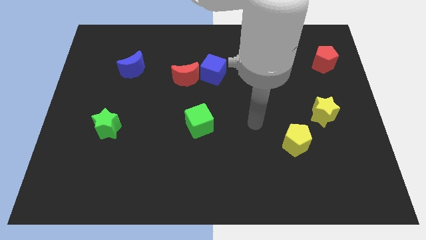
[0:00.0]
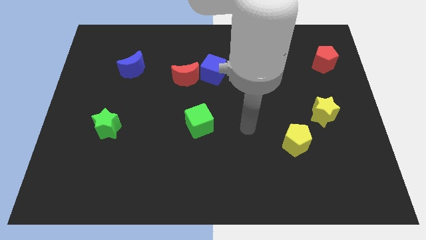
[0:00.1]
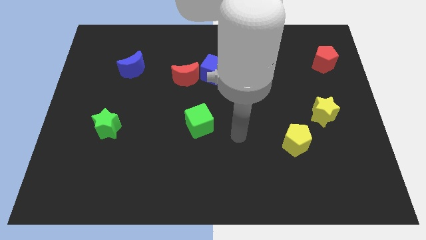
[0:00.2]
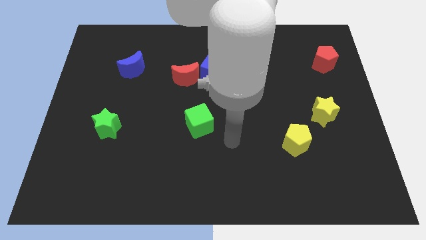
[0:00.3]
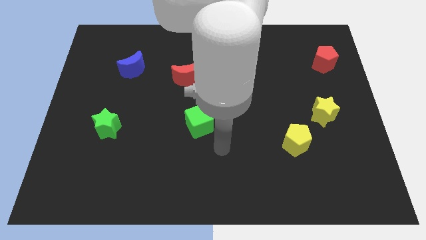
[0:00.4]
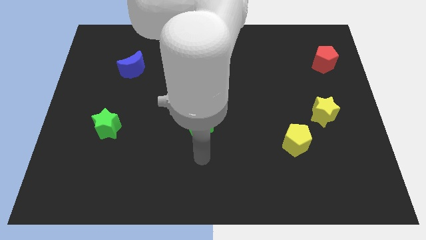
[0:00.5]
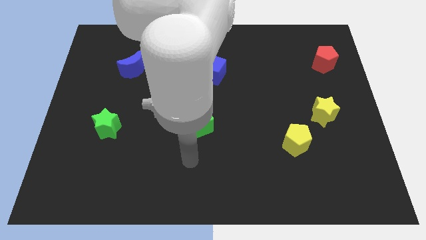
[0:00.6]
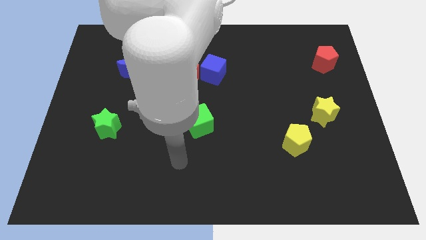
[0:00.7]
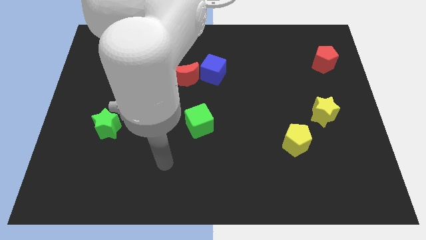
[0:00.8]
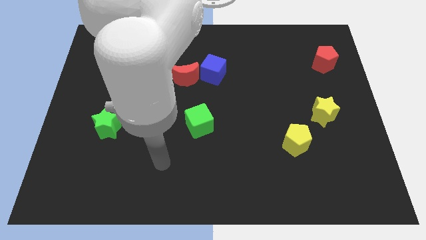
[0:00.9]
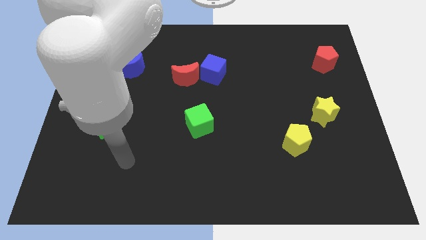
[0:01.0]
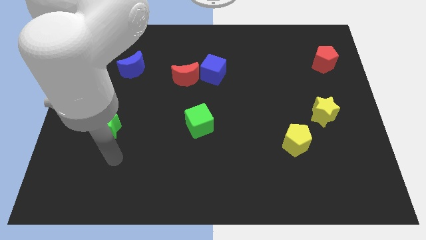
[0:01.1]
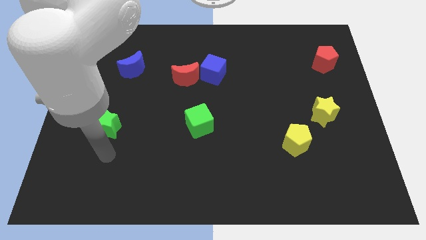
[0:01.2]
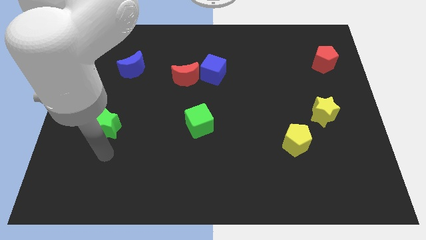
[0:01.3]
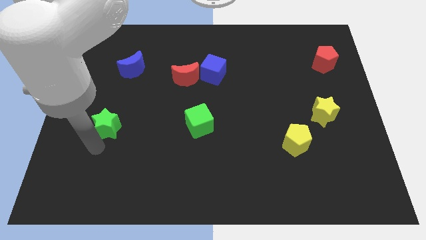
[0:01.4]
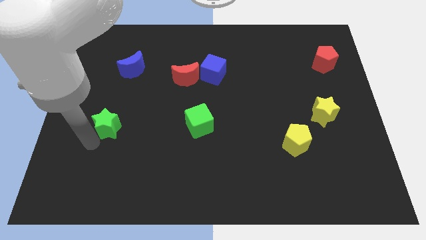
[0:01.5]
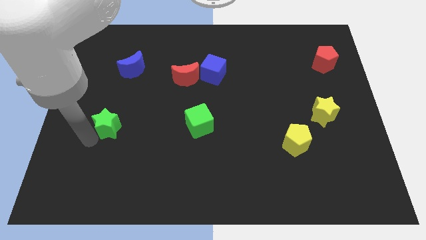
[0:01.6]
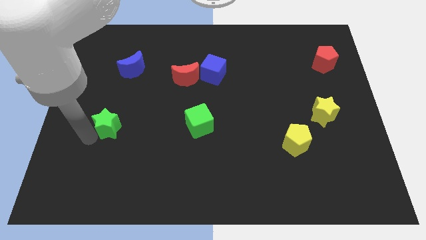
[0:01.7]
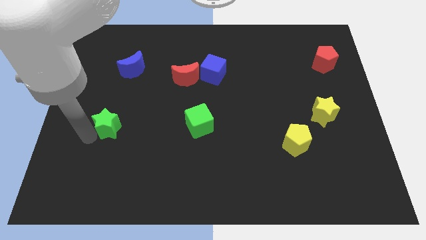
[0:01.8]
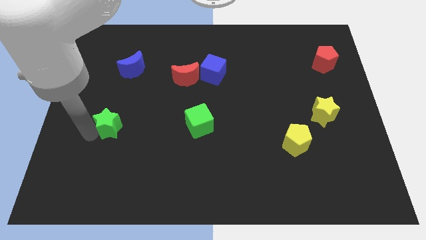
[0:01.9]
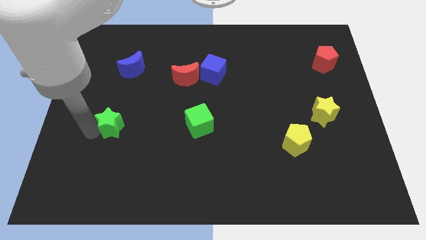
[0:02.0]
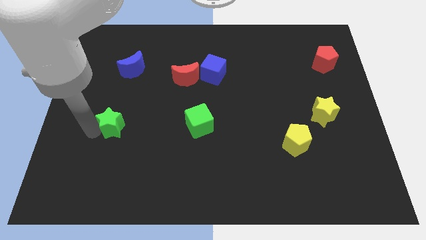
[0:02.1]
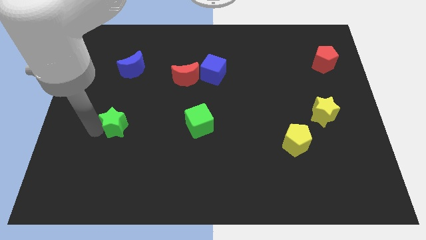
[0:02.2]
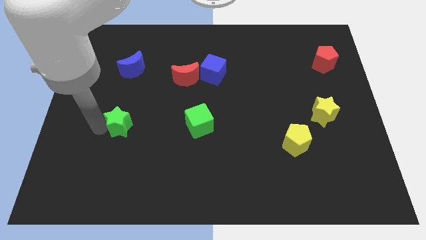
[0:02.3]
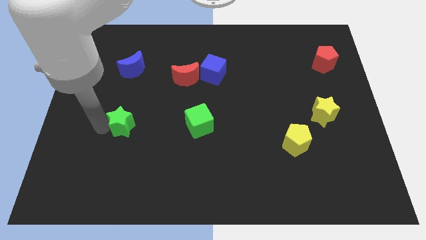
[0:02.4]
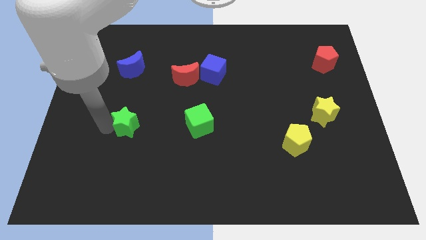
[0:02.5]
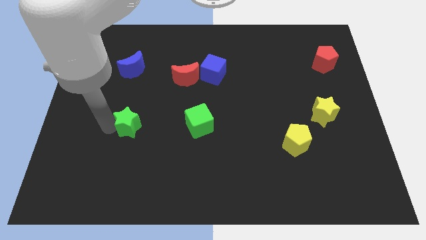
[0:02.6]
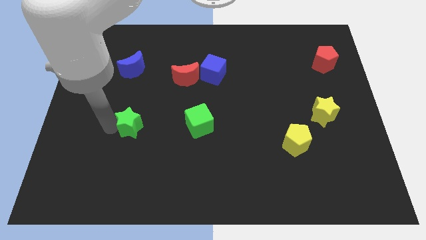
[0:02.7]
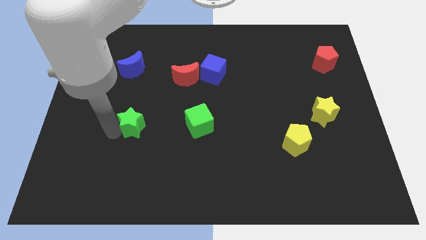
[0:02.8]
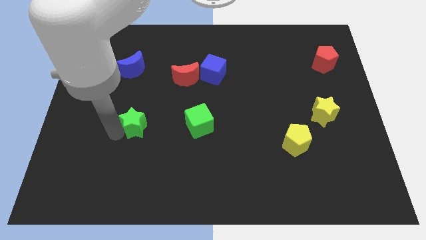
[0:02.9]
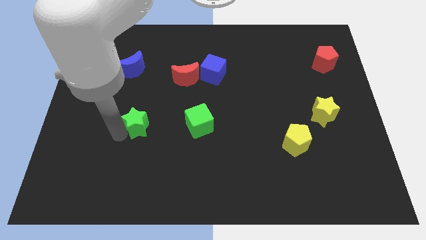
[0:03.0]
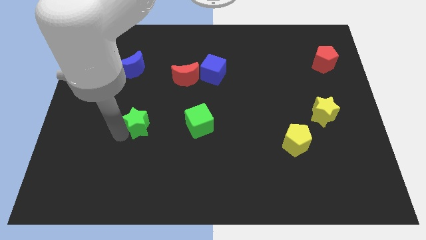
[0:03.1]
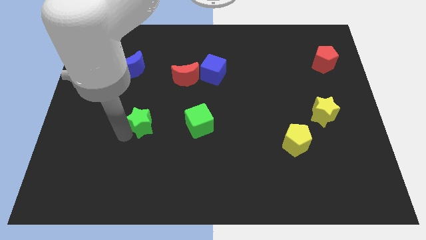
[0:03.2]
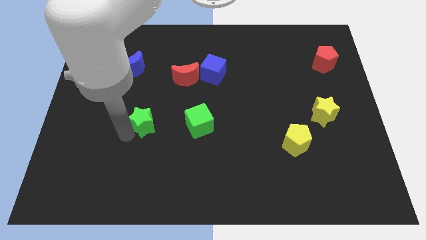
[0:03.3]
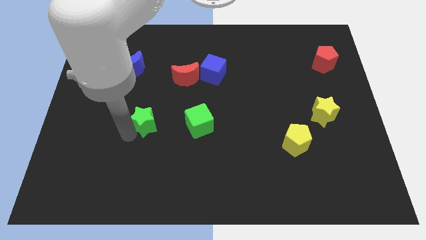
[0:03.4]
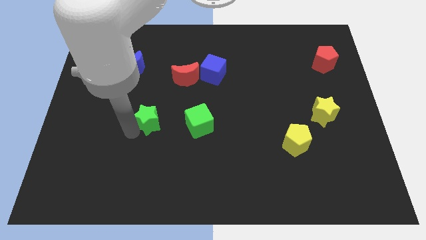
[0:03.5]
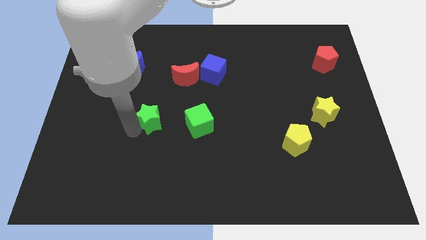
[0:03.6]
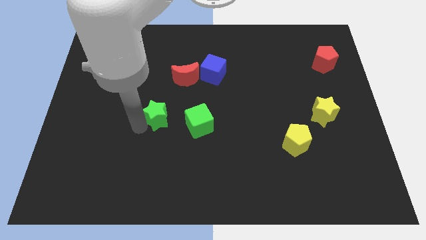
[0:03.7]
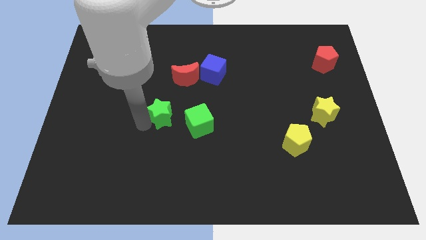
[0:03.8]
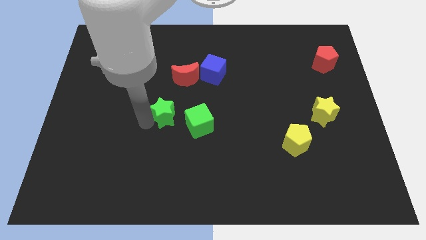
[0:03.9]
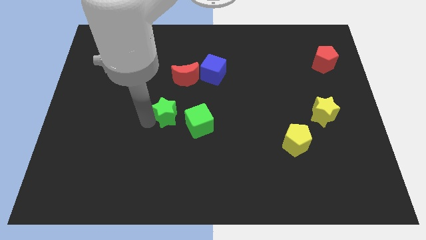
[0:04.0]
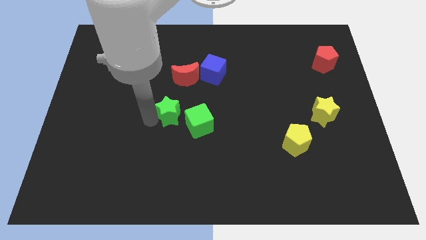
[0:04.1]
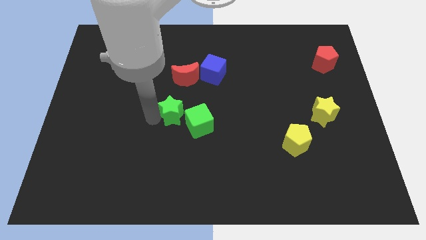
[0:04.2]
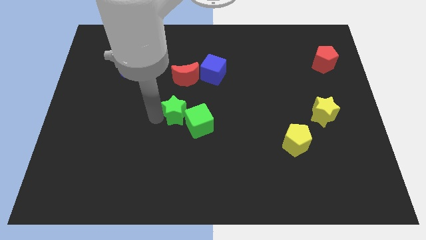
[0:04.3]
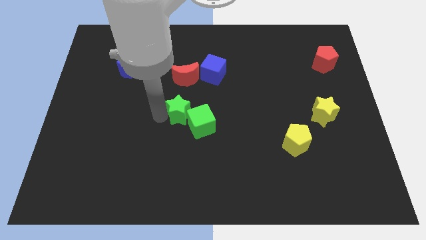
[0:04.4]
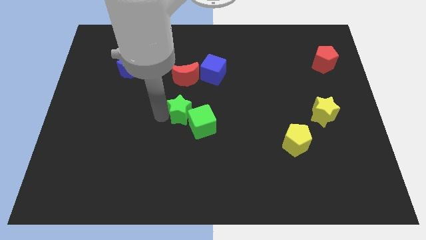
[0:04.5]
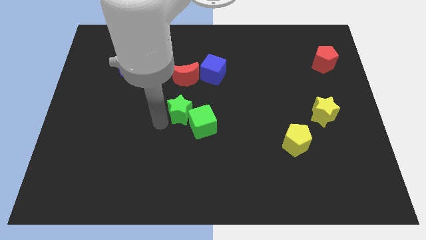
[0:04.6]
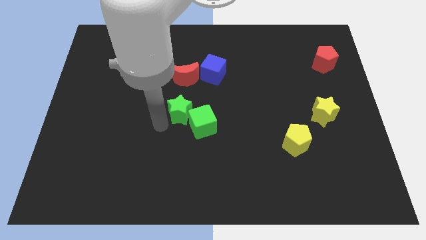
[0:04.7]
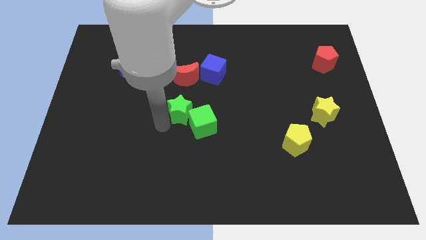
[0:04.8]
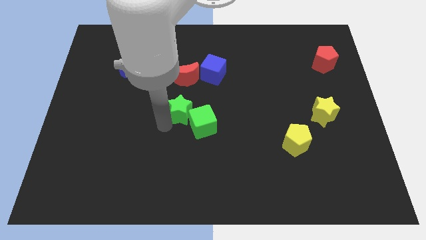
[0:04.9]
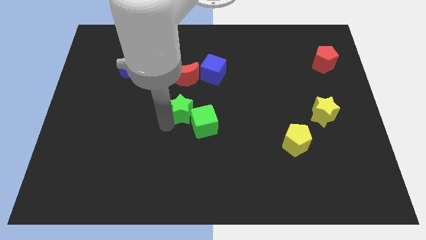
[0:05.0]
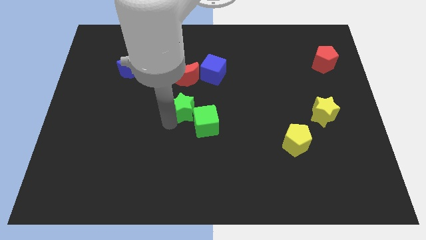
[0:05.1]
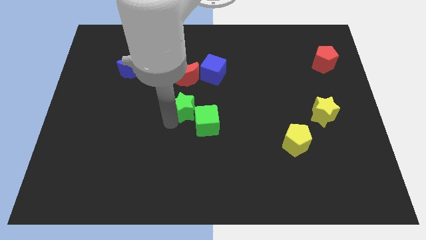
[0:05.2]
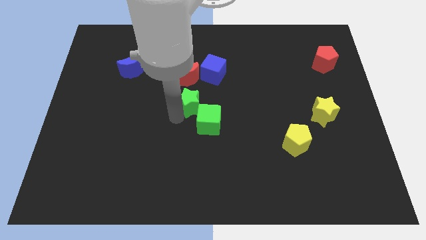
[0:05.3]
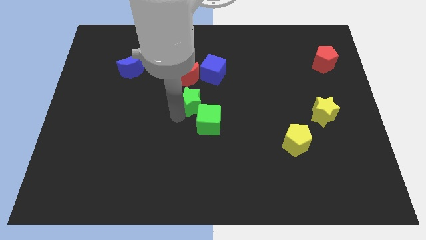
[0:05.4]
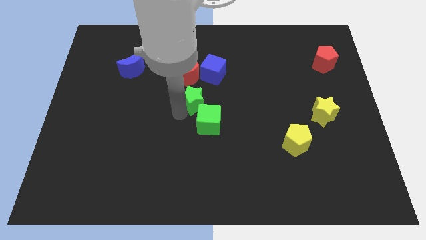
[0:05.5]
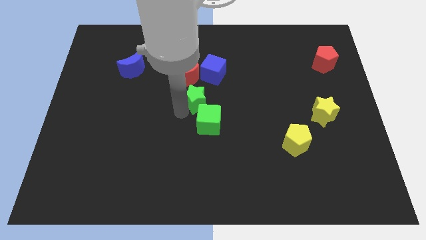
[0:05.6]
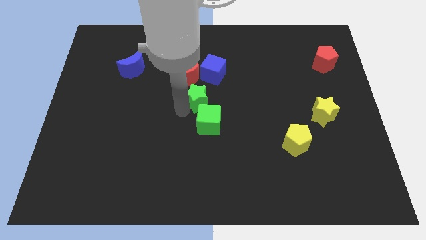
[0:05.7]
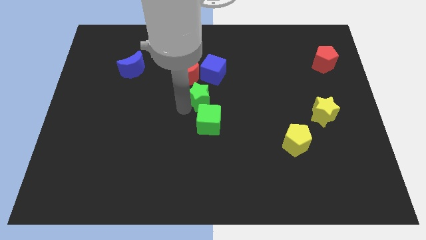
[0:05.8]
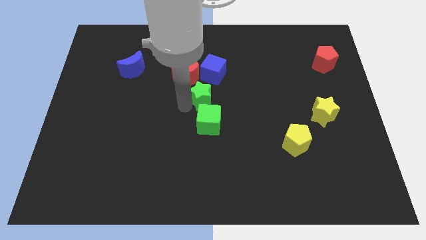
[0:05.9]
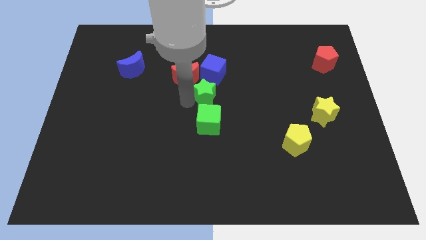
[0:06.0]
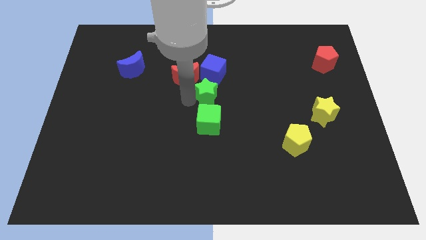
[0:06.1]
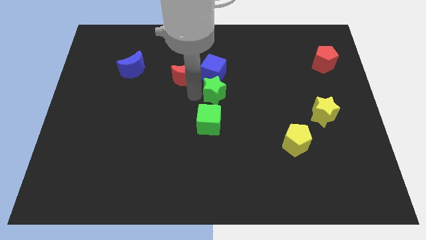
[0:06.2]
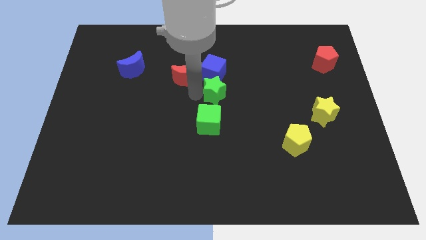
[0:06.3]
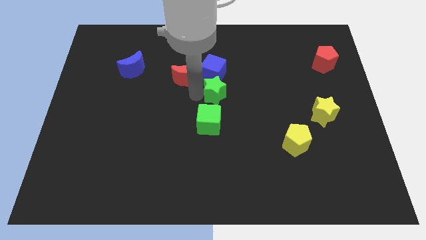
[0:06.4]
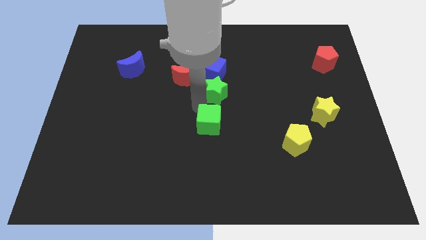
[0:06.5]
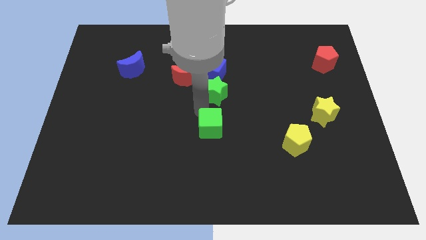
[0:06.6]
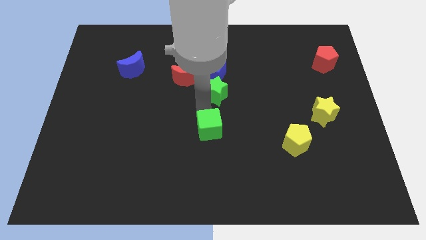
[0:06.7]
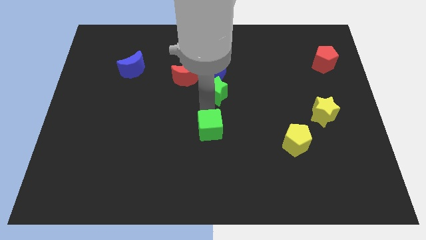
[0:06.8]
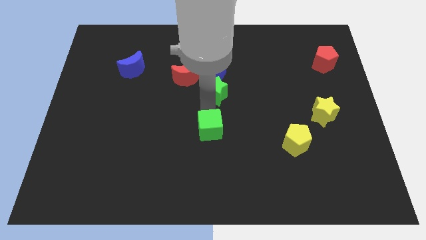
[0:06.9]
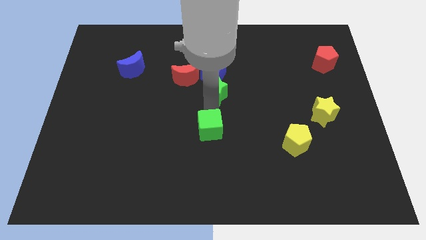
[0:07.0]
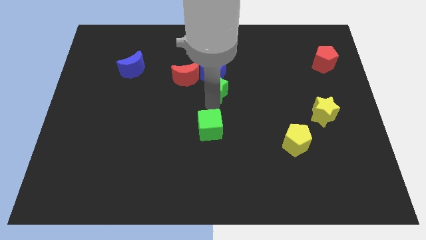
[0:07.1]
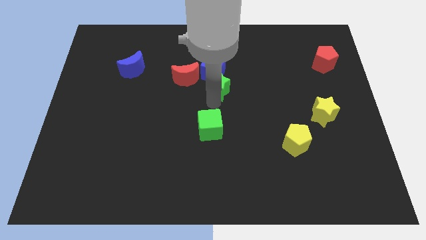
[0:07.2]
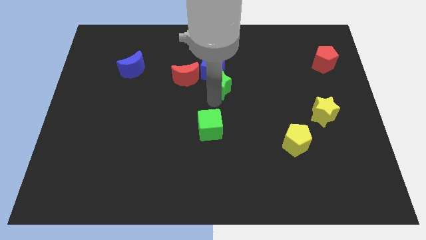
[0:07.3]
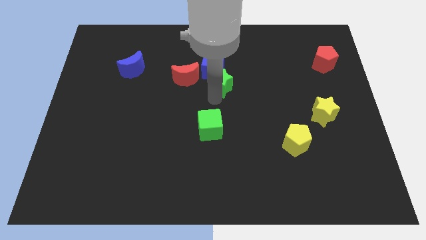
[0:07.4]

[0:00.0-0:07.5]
push the green star towards the blue cube

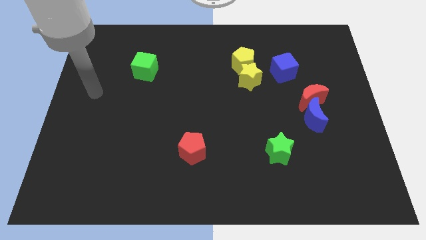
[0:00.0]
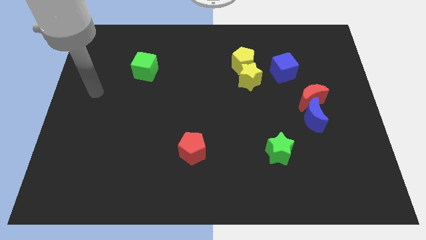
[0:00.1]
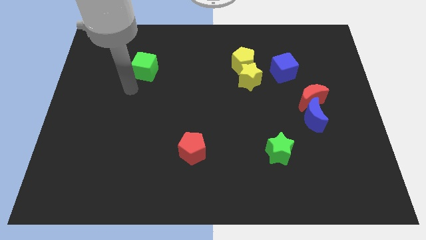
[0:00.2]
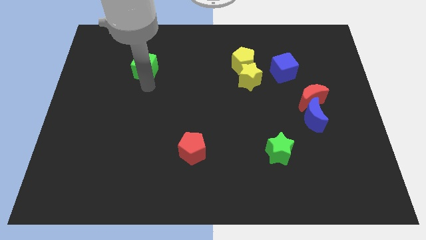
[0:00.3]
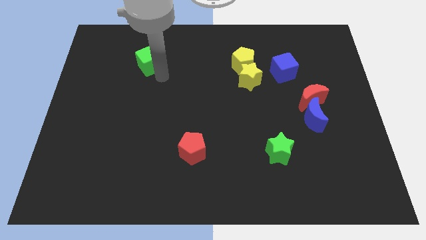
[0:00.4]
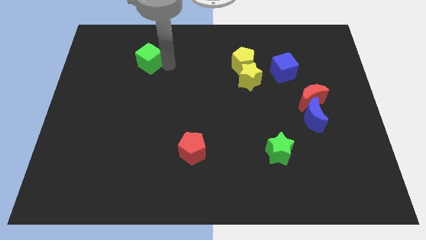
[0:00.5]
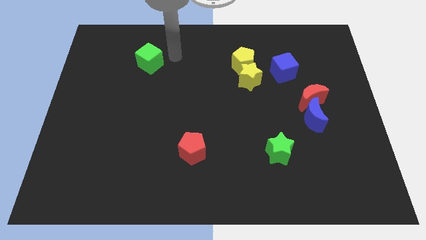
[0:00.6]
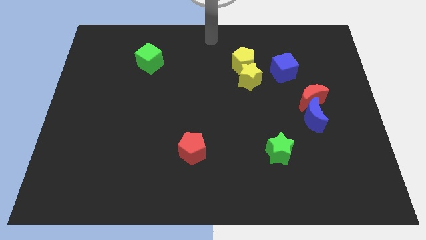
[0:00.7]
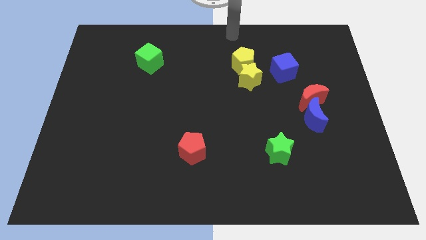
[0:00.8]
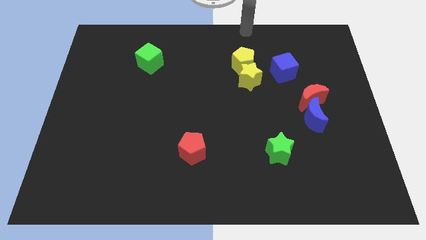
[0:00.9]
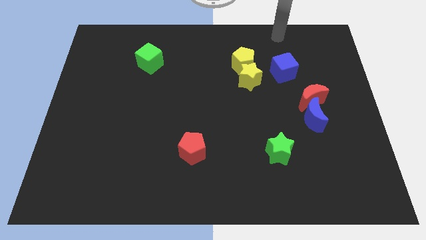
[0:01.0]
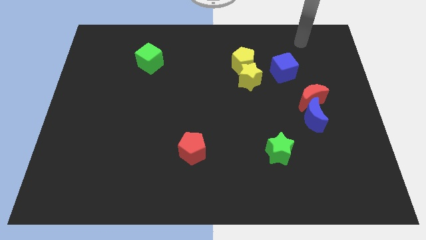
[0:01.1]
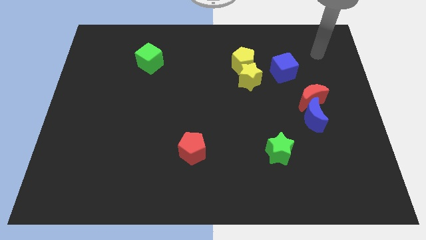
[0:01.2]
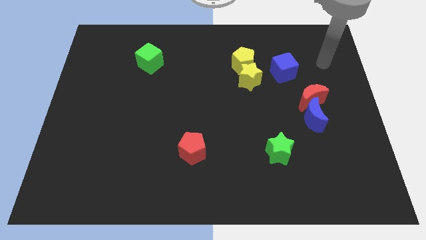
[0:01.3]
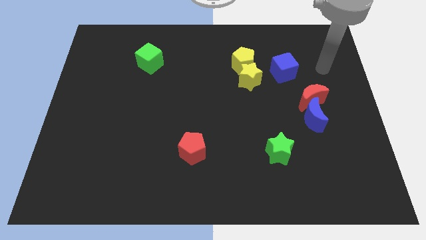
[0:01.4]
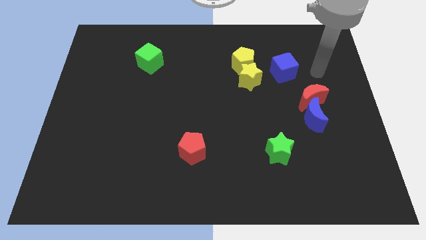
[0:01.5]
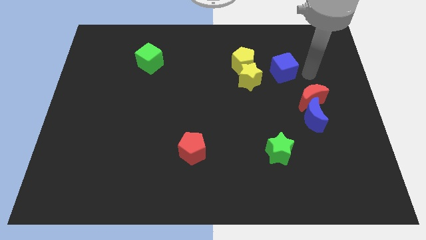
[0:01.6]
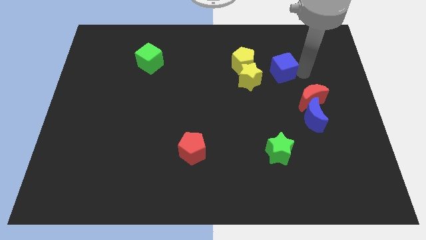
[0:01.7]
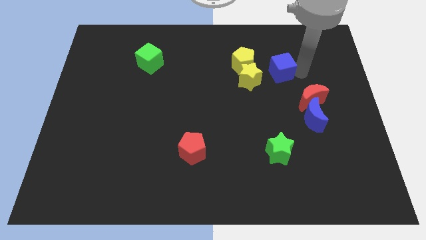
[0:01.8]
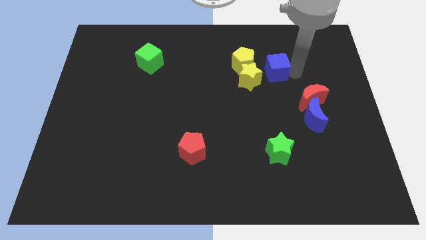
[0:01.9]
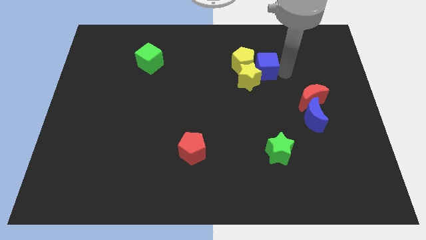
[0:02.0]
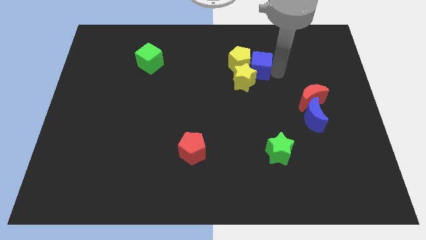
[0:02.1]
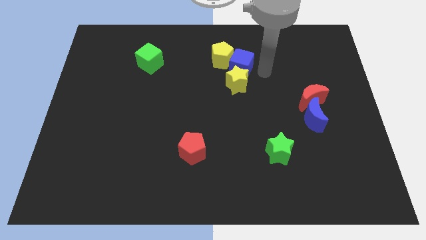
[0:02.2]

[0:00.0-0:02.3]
put the blue cube next to the yellow pentagon
